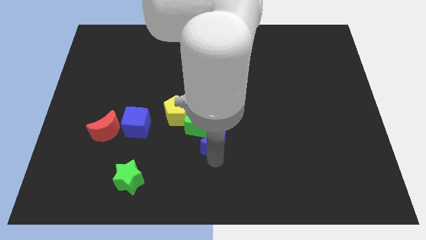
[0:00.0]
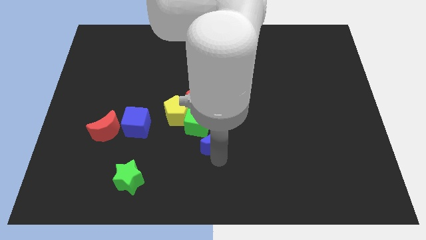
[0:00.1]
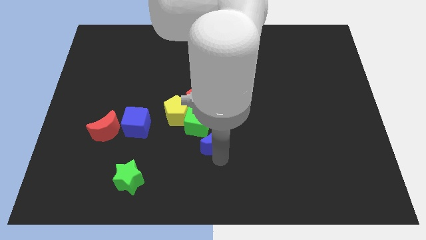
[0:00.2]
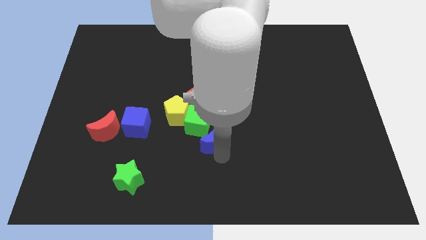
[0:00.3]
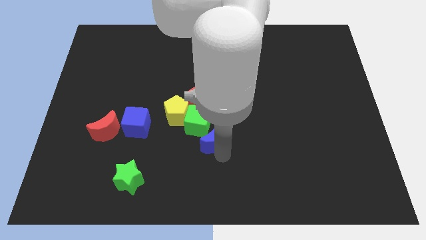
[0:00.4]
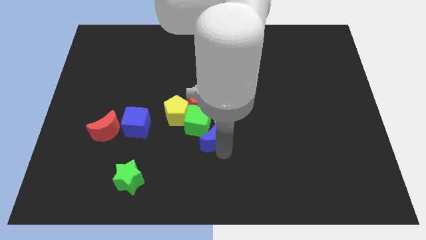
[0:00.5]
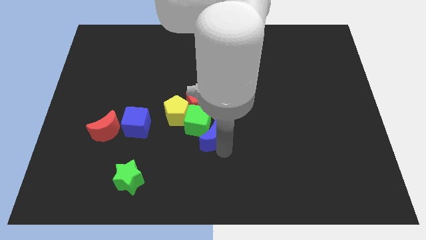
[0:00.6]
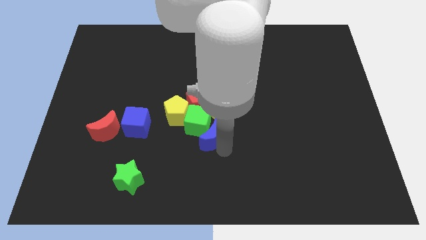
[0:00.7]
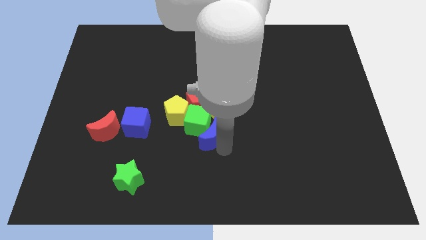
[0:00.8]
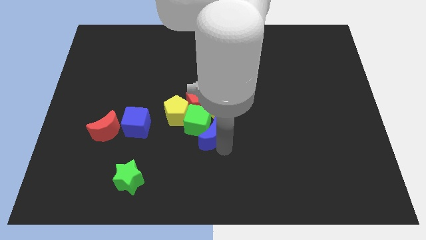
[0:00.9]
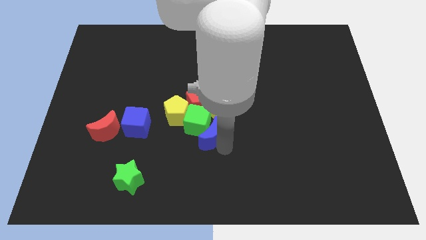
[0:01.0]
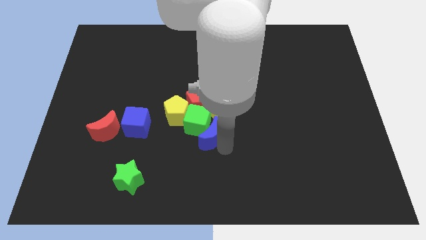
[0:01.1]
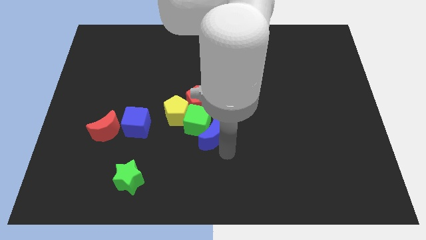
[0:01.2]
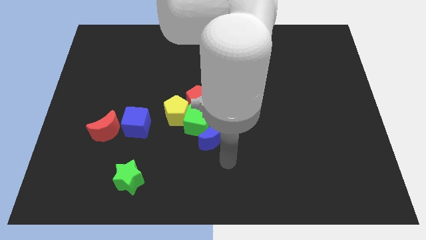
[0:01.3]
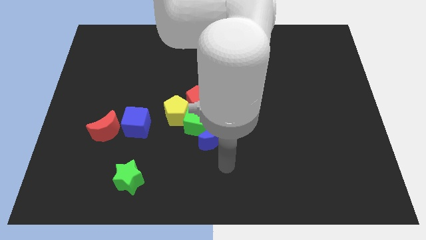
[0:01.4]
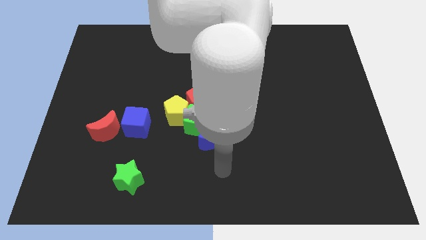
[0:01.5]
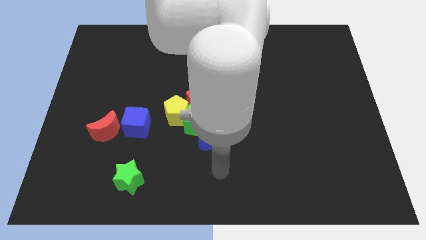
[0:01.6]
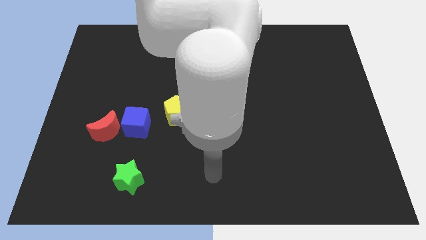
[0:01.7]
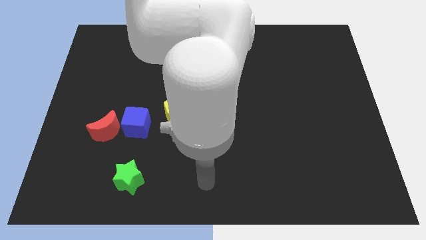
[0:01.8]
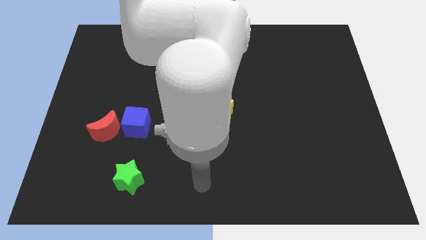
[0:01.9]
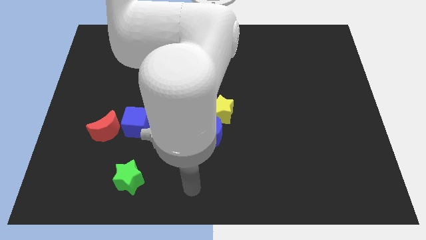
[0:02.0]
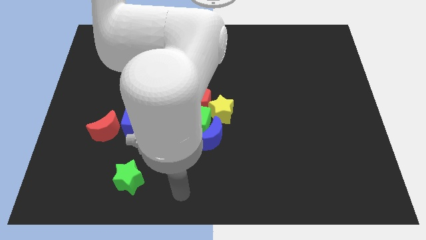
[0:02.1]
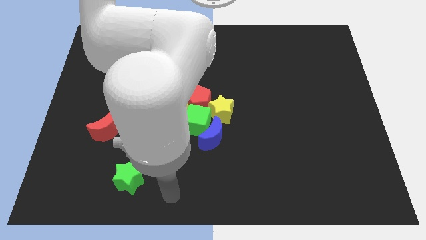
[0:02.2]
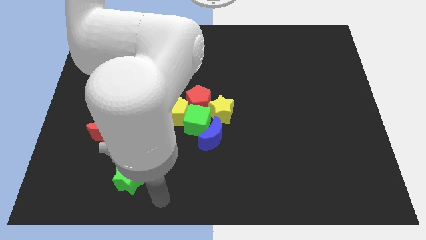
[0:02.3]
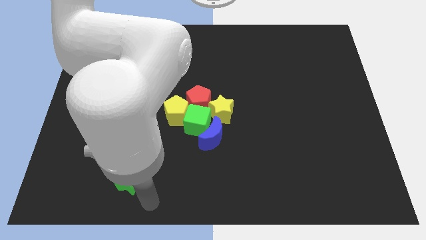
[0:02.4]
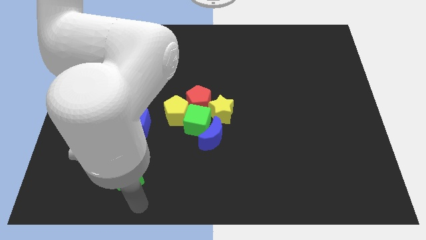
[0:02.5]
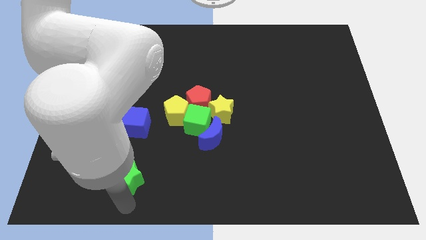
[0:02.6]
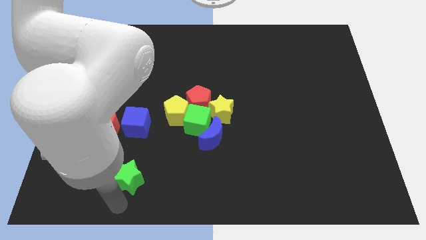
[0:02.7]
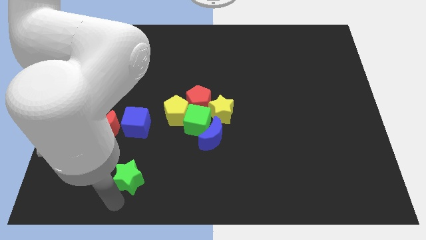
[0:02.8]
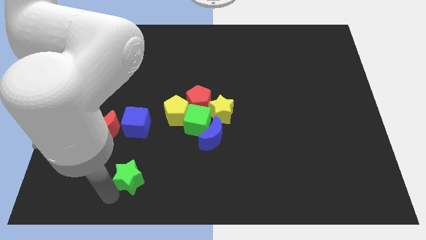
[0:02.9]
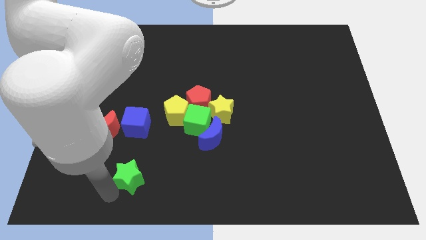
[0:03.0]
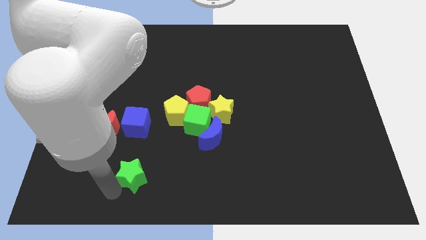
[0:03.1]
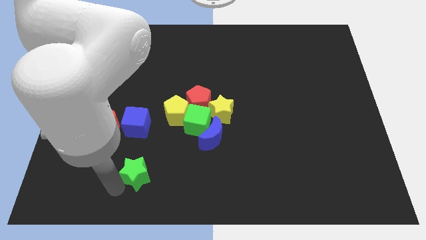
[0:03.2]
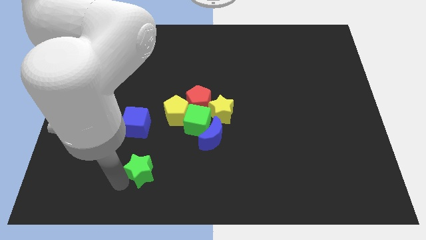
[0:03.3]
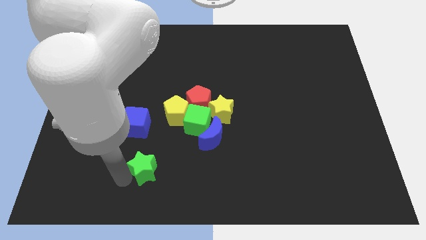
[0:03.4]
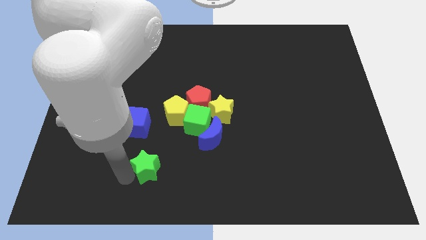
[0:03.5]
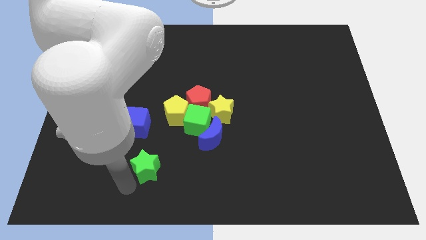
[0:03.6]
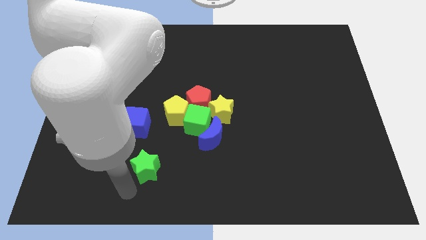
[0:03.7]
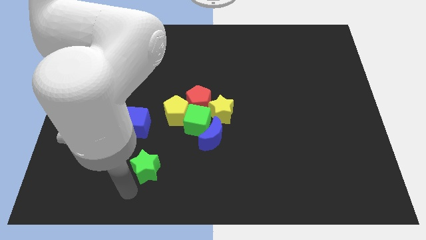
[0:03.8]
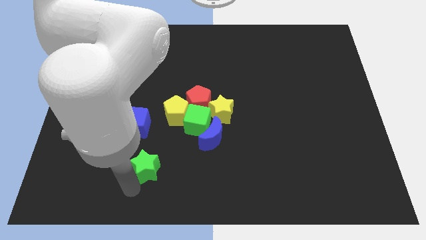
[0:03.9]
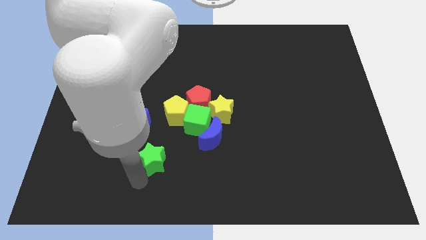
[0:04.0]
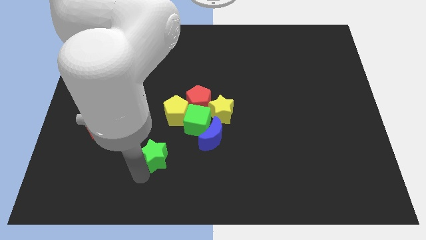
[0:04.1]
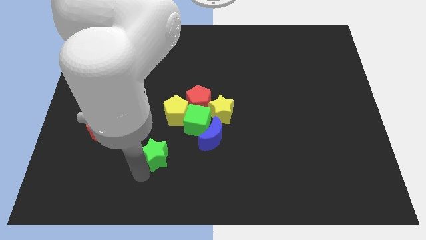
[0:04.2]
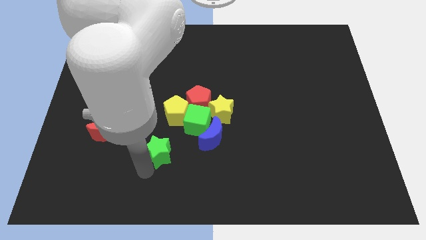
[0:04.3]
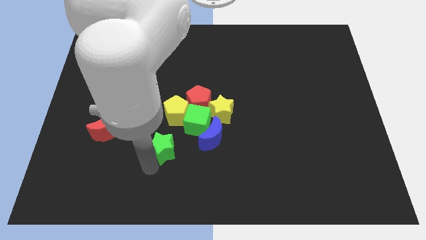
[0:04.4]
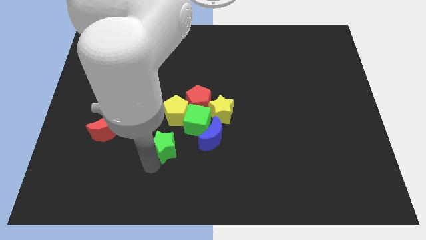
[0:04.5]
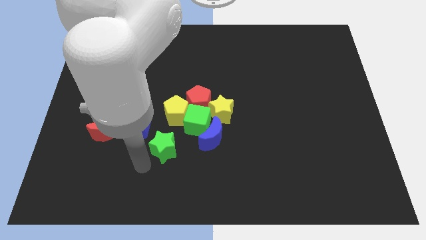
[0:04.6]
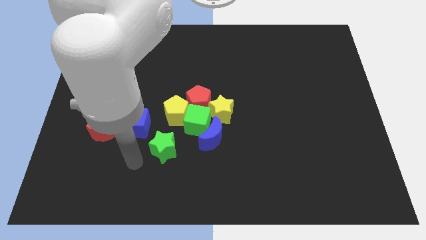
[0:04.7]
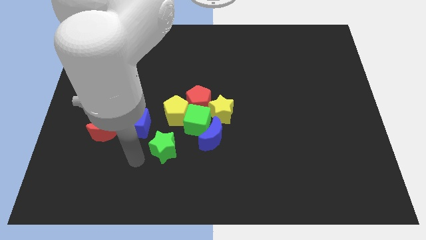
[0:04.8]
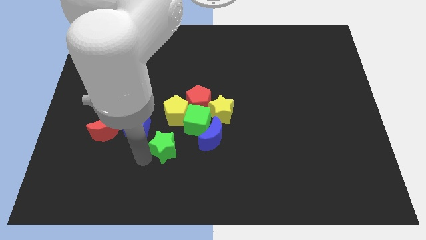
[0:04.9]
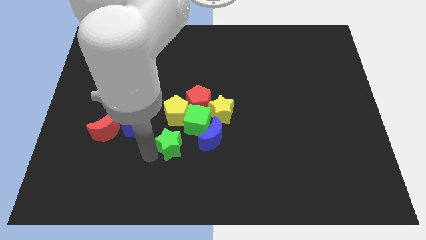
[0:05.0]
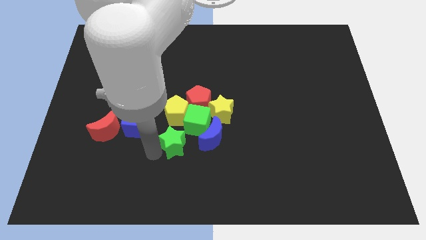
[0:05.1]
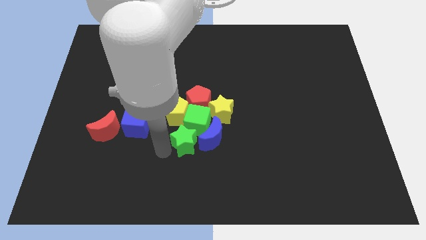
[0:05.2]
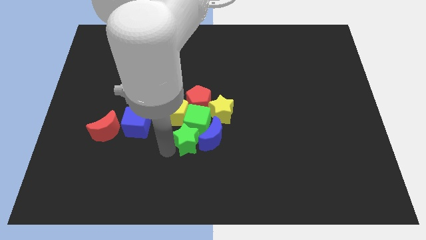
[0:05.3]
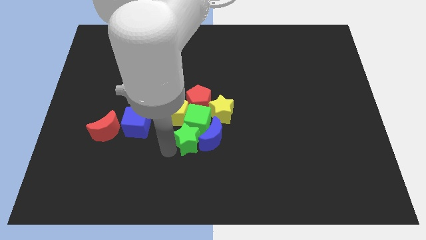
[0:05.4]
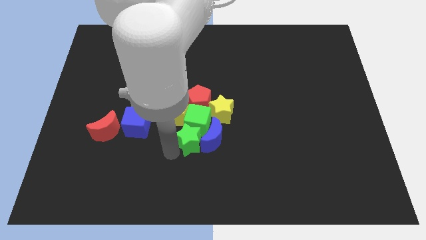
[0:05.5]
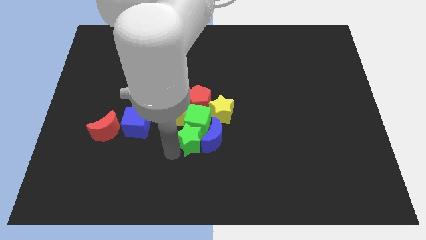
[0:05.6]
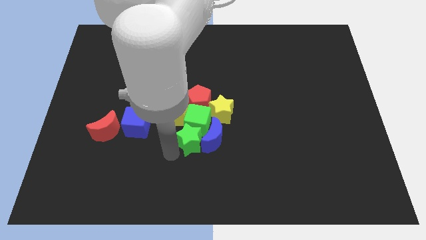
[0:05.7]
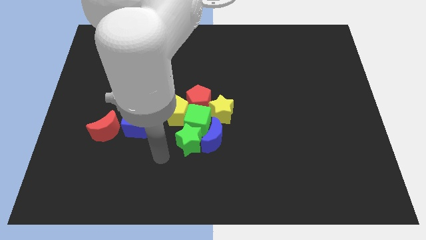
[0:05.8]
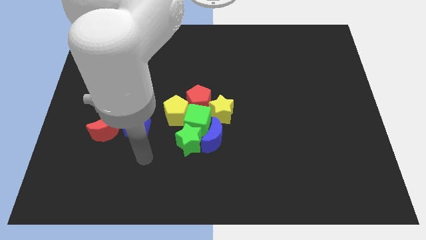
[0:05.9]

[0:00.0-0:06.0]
place the green star at the bottom of the green cube

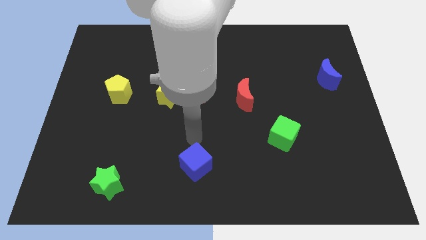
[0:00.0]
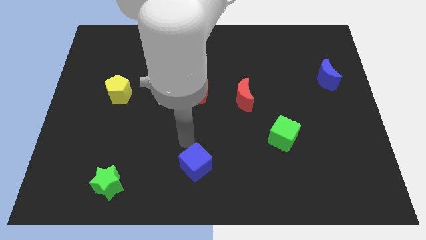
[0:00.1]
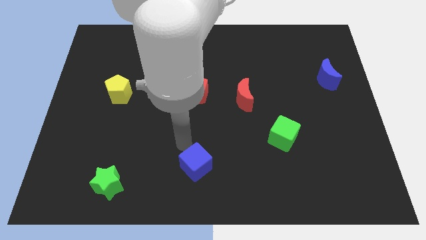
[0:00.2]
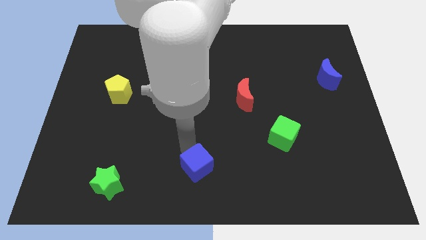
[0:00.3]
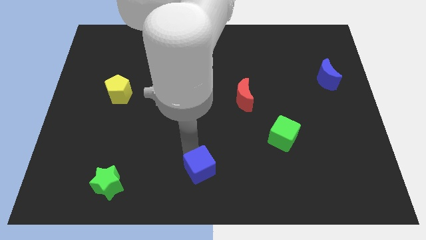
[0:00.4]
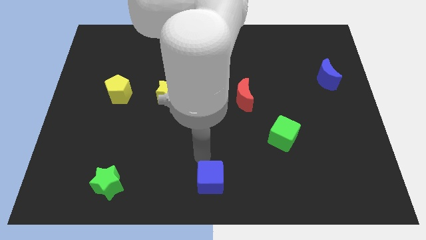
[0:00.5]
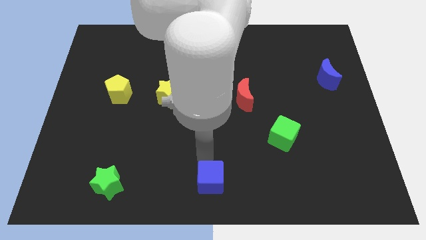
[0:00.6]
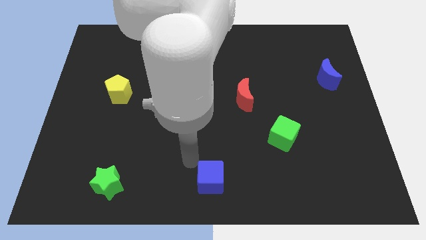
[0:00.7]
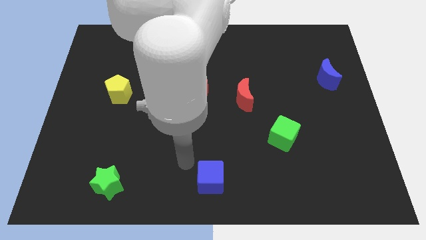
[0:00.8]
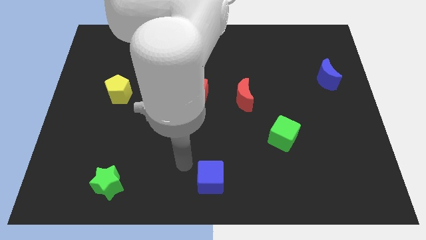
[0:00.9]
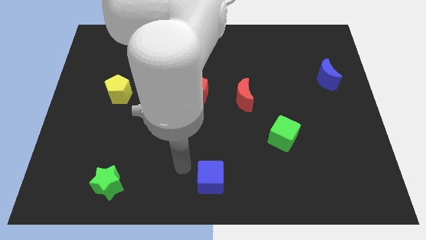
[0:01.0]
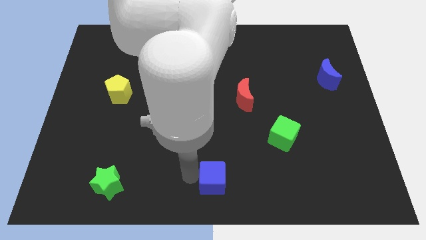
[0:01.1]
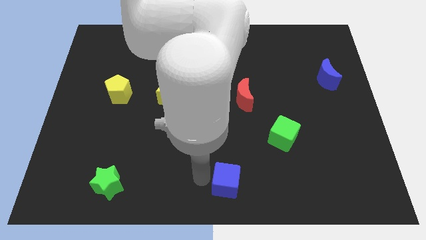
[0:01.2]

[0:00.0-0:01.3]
place the blue cube at the bottom center of the board

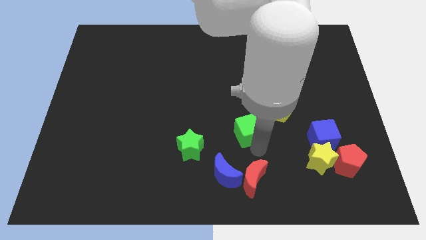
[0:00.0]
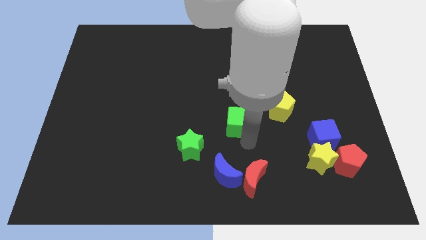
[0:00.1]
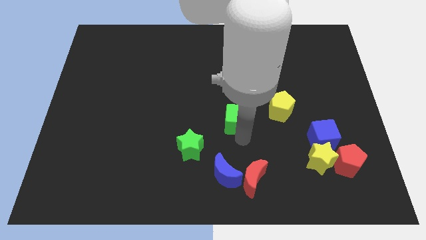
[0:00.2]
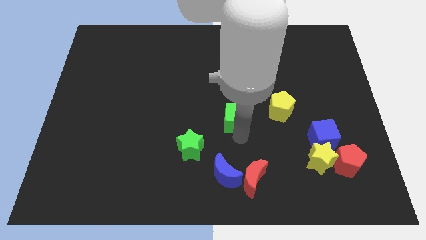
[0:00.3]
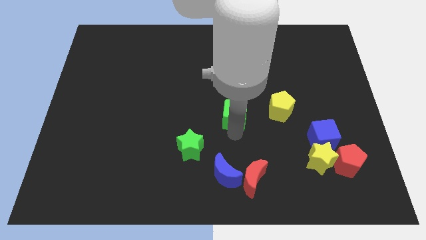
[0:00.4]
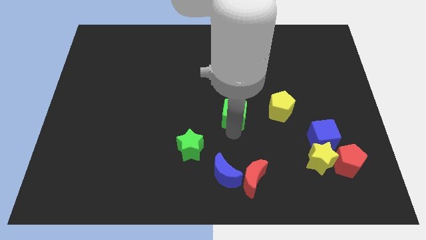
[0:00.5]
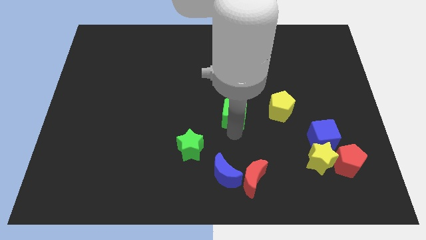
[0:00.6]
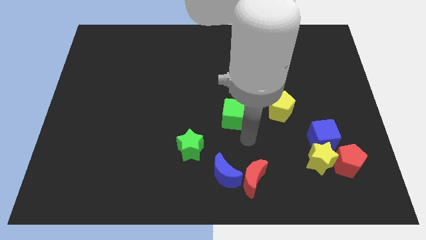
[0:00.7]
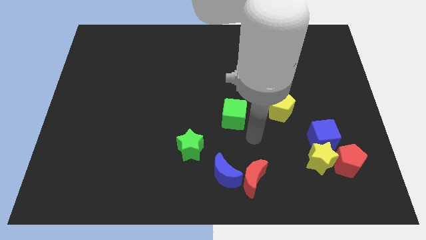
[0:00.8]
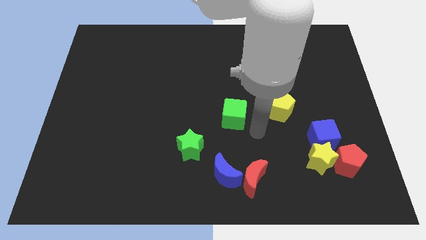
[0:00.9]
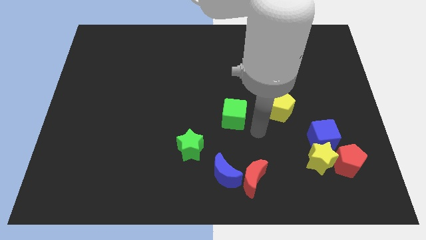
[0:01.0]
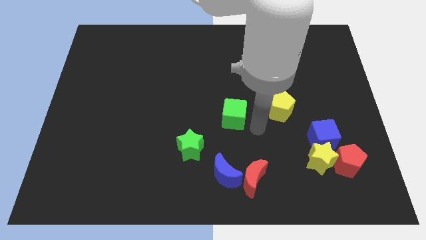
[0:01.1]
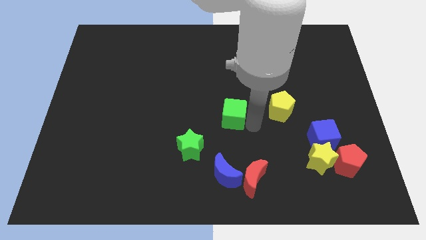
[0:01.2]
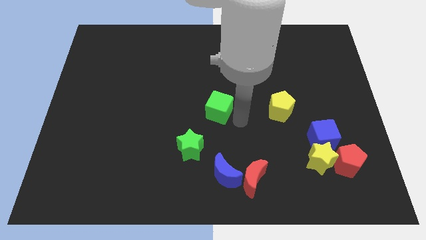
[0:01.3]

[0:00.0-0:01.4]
push the green cube to the left of the yellow pentagon

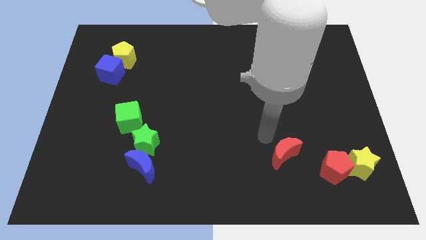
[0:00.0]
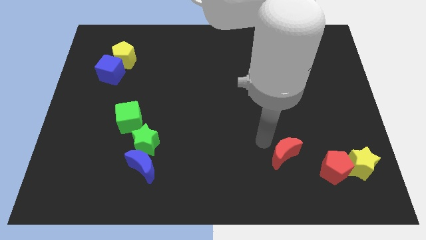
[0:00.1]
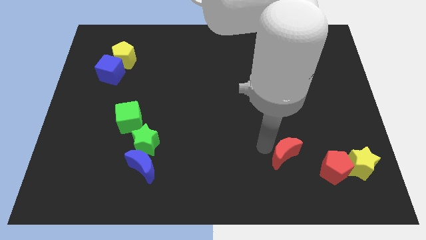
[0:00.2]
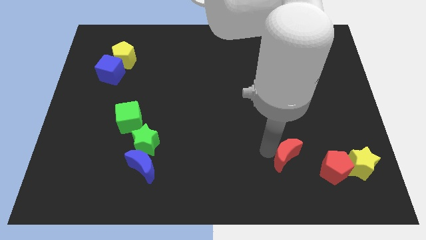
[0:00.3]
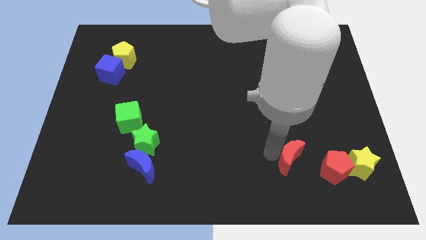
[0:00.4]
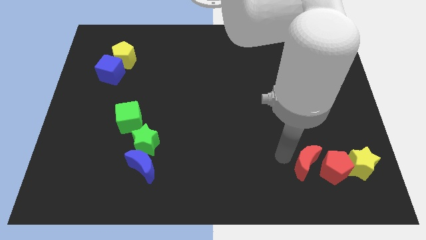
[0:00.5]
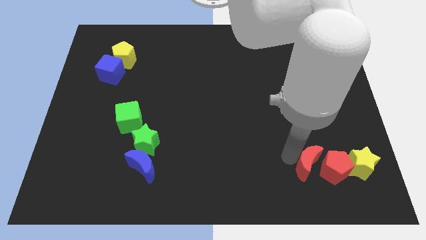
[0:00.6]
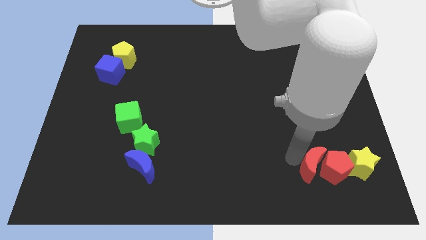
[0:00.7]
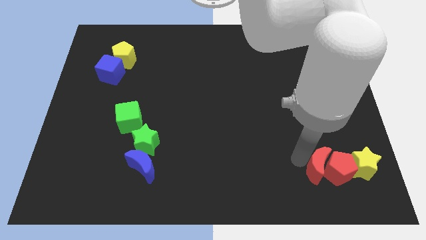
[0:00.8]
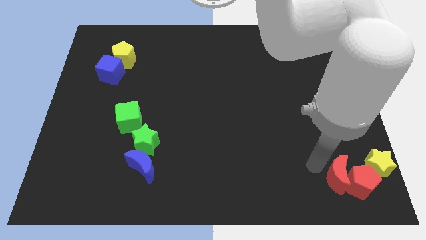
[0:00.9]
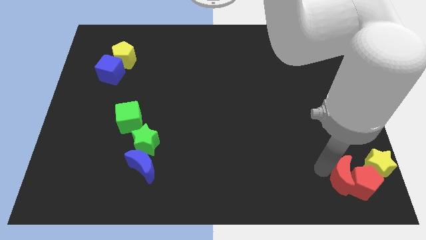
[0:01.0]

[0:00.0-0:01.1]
move red moon into red pentagon
